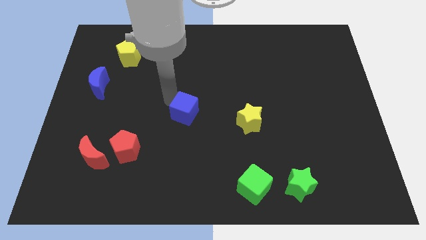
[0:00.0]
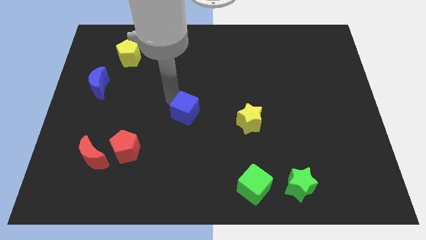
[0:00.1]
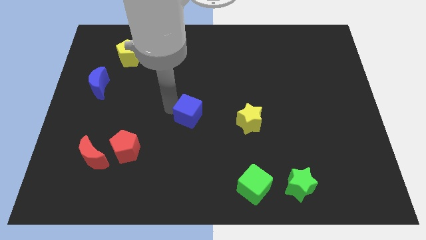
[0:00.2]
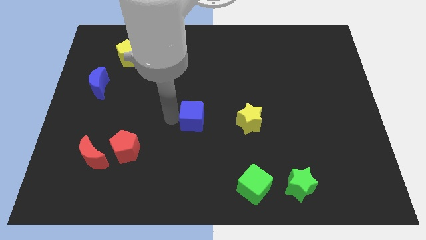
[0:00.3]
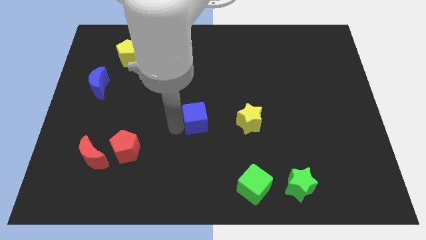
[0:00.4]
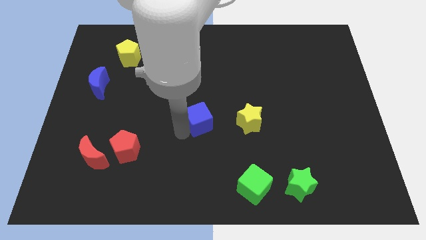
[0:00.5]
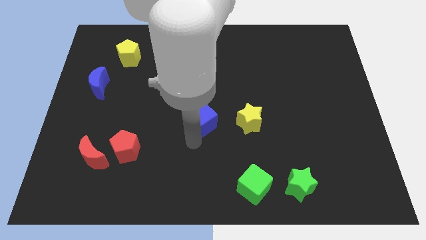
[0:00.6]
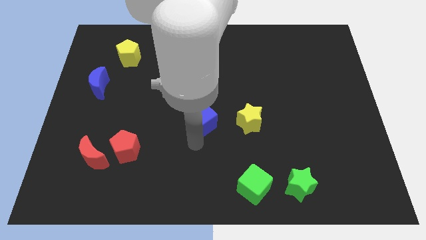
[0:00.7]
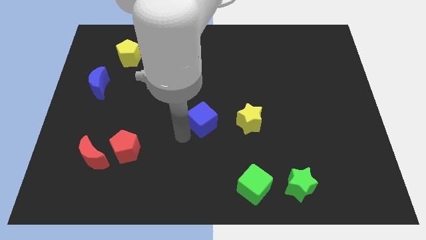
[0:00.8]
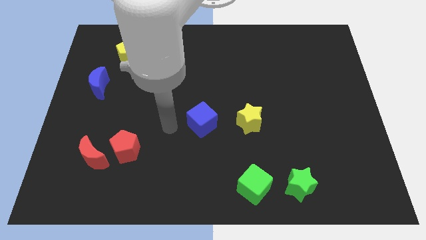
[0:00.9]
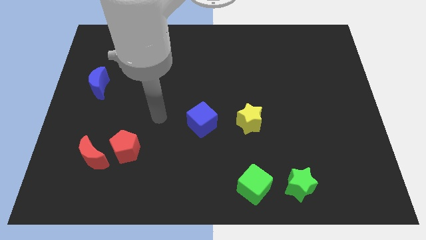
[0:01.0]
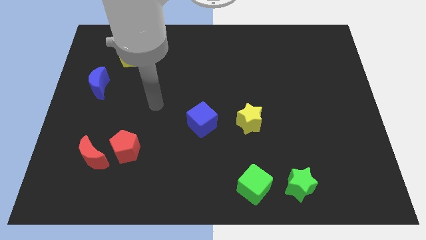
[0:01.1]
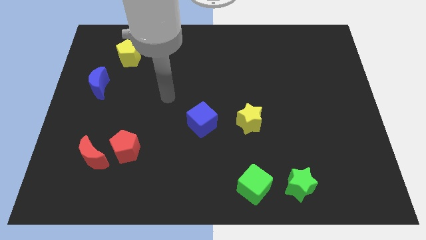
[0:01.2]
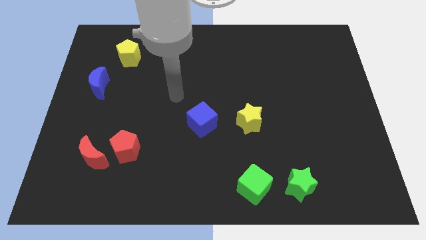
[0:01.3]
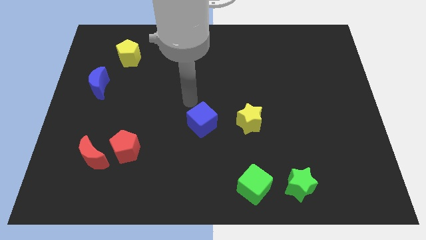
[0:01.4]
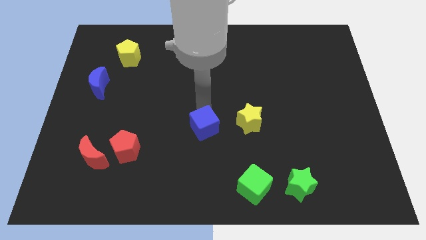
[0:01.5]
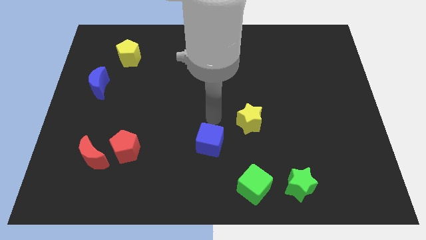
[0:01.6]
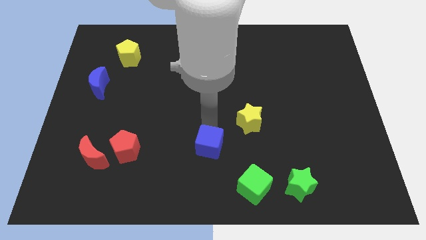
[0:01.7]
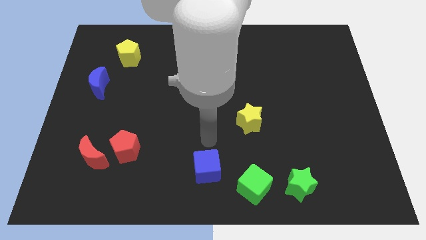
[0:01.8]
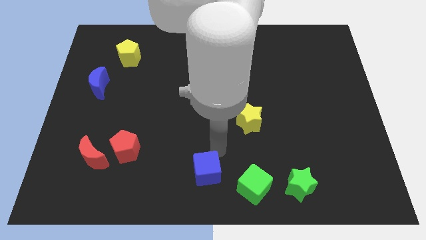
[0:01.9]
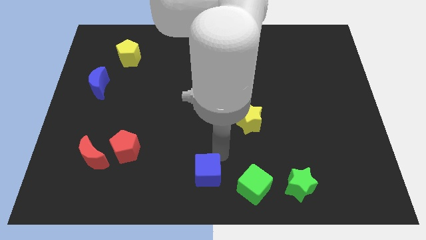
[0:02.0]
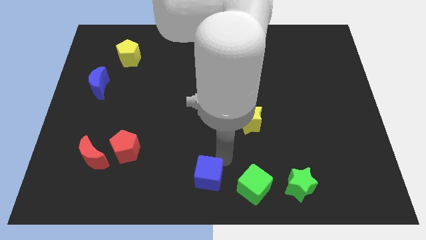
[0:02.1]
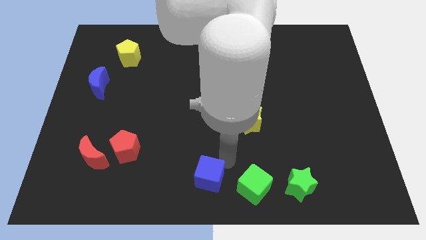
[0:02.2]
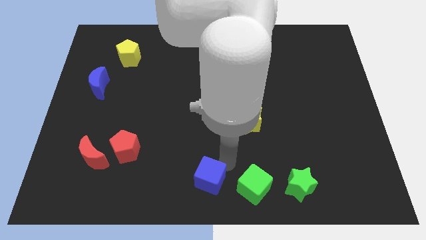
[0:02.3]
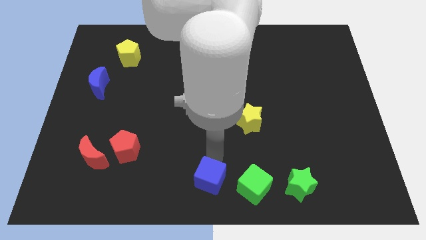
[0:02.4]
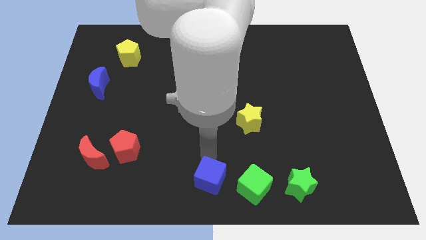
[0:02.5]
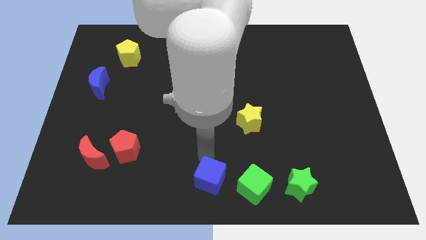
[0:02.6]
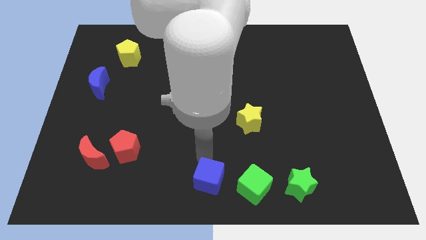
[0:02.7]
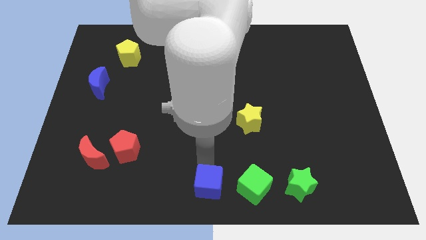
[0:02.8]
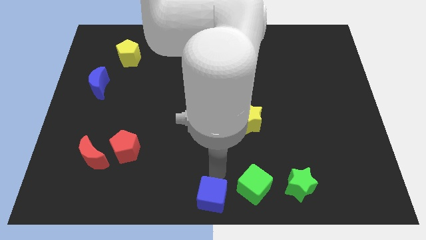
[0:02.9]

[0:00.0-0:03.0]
move the blue cube to the left of the green cube

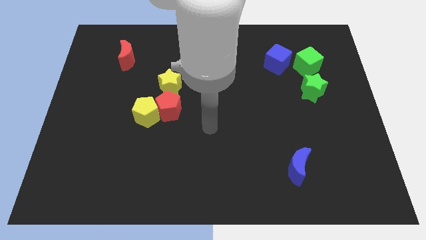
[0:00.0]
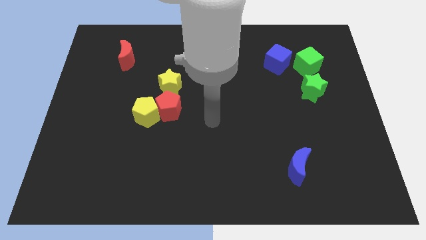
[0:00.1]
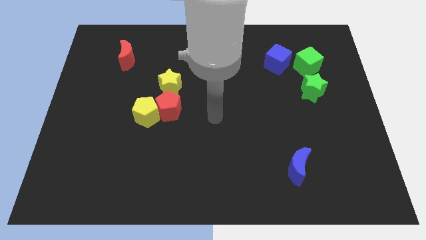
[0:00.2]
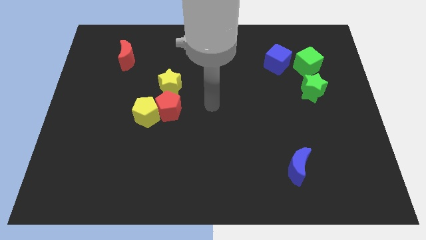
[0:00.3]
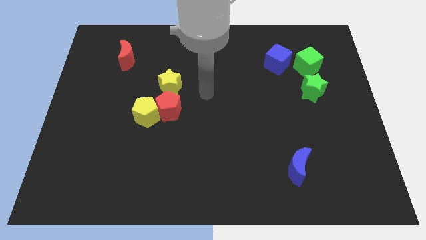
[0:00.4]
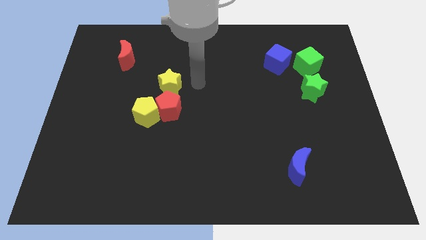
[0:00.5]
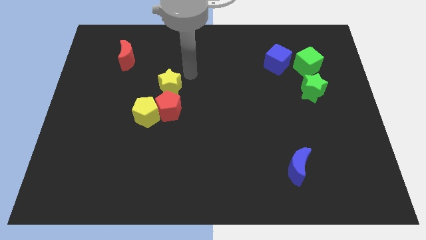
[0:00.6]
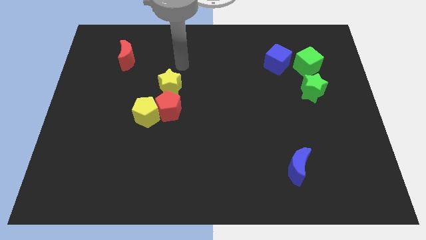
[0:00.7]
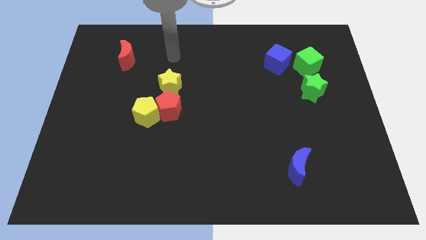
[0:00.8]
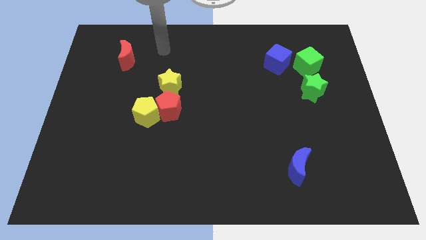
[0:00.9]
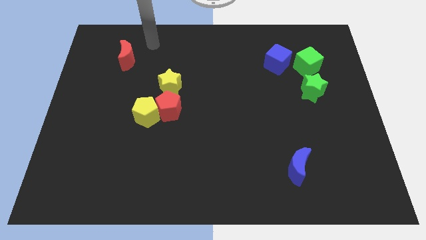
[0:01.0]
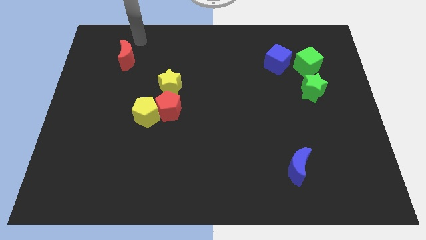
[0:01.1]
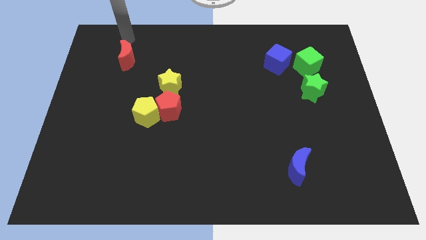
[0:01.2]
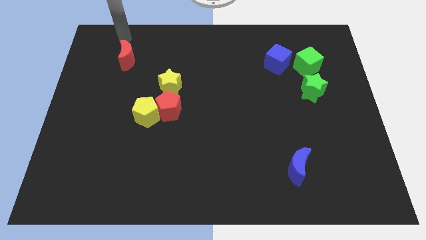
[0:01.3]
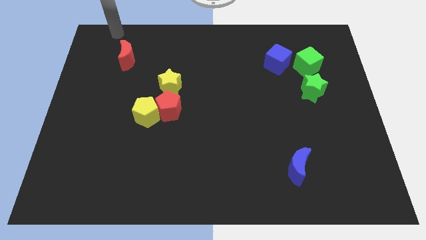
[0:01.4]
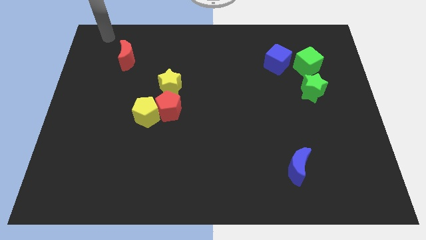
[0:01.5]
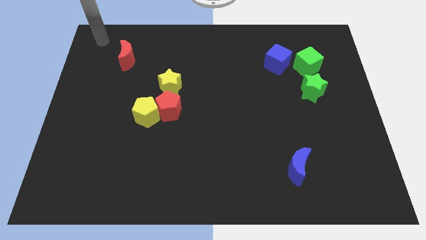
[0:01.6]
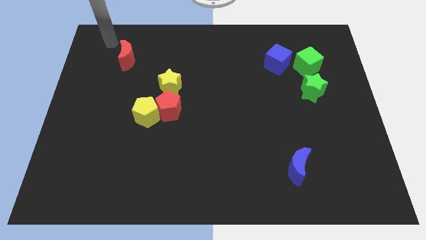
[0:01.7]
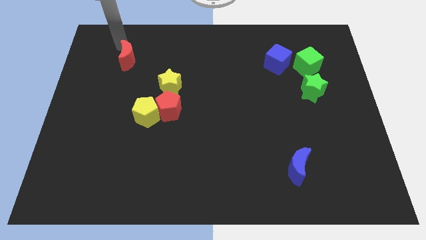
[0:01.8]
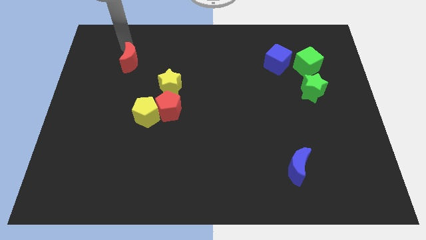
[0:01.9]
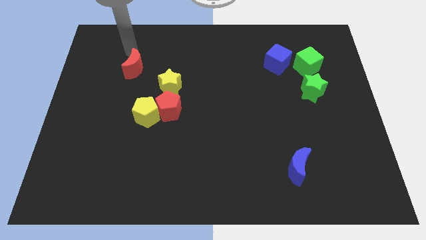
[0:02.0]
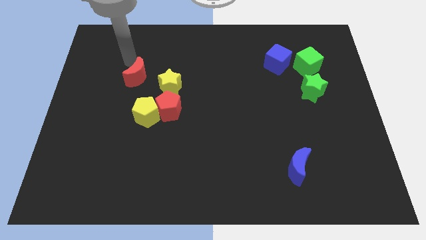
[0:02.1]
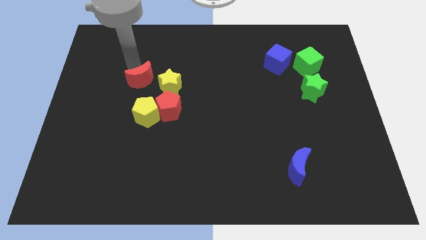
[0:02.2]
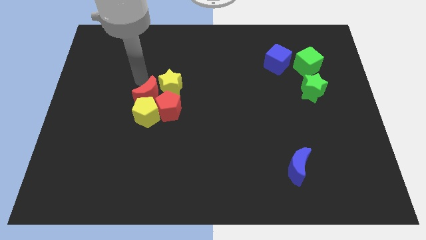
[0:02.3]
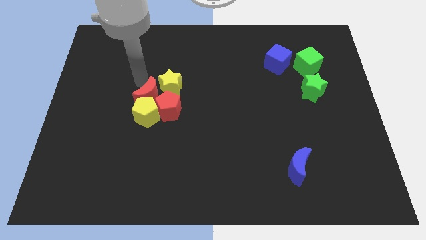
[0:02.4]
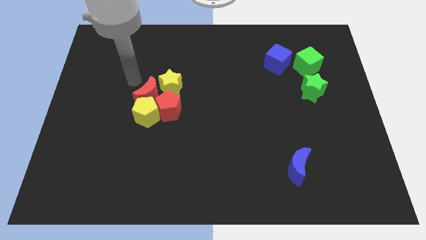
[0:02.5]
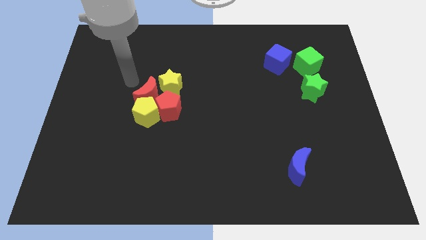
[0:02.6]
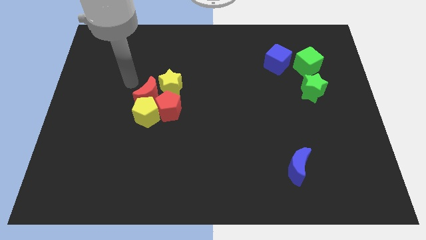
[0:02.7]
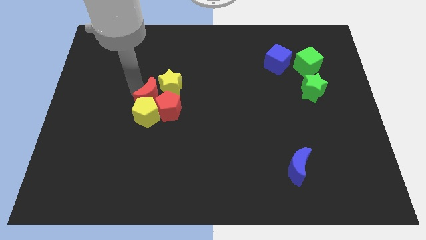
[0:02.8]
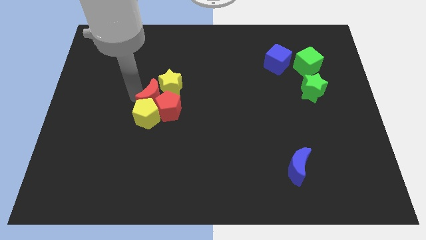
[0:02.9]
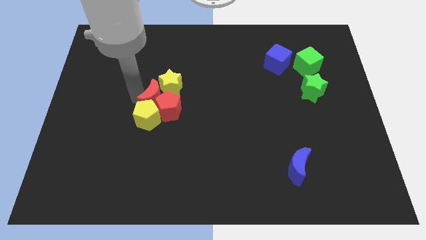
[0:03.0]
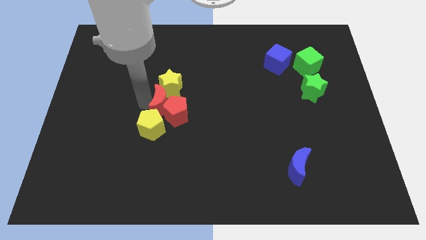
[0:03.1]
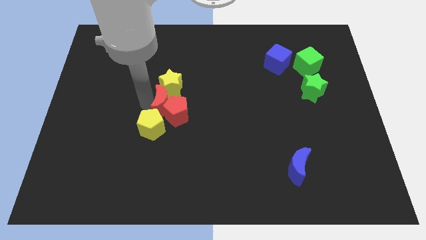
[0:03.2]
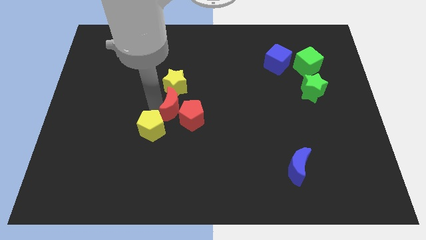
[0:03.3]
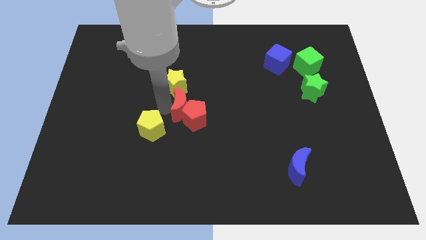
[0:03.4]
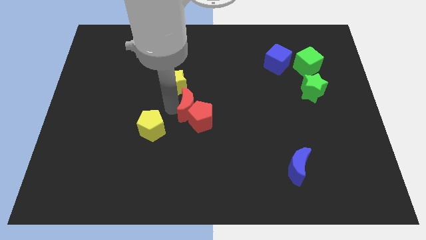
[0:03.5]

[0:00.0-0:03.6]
push the red moon into red pentagon

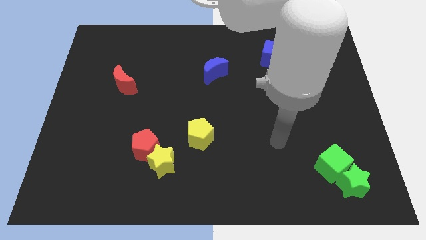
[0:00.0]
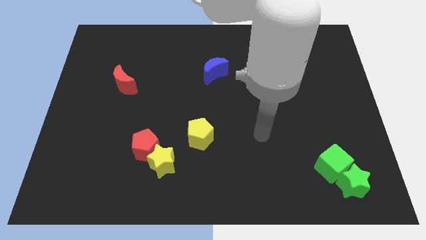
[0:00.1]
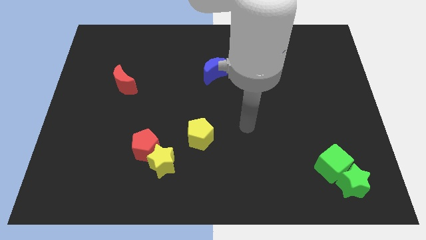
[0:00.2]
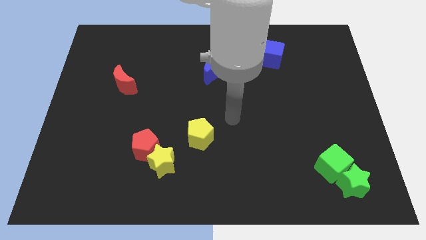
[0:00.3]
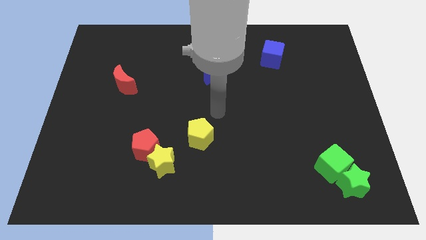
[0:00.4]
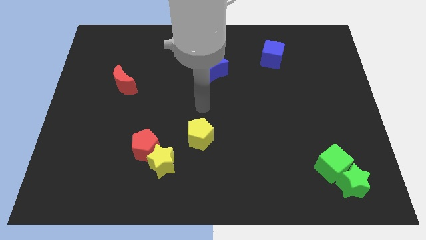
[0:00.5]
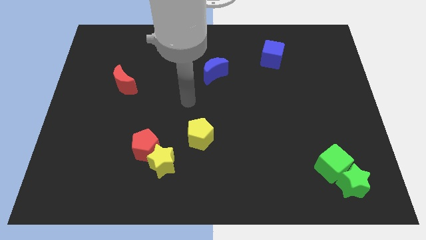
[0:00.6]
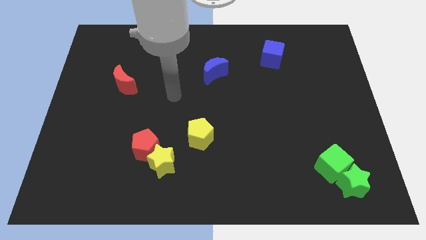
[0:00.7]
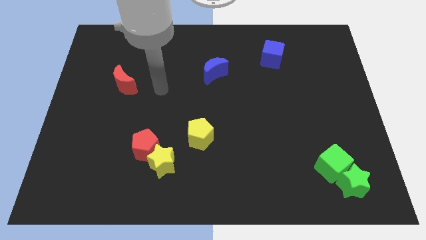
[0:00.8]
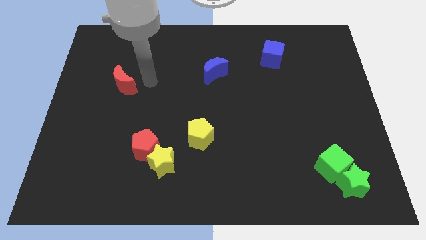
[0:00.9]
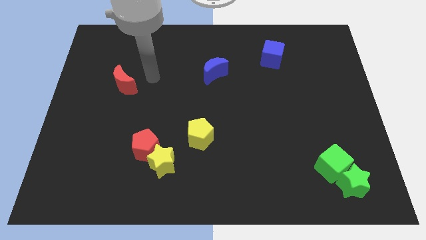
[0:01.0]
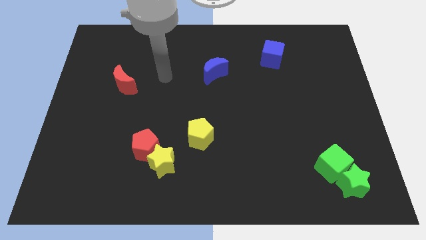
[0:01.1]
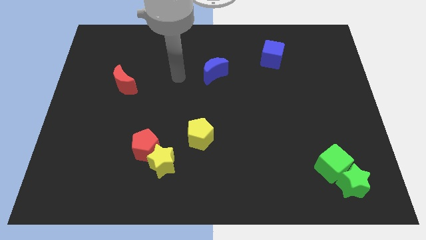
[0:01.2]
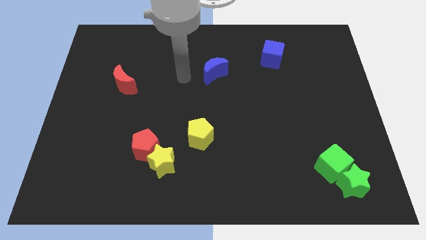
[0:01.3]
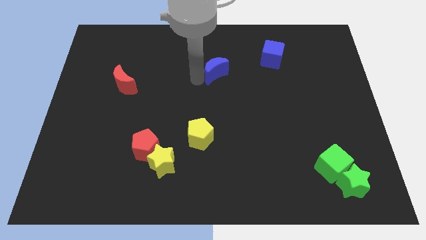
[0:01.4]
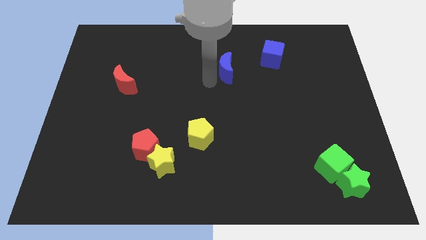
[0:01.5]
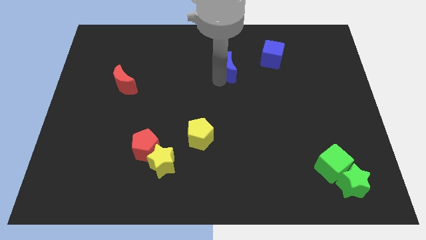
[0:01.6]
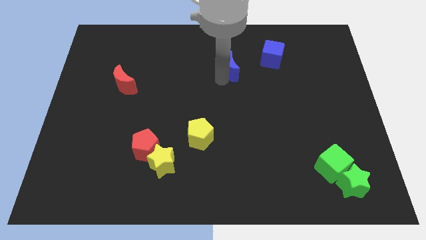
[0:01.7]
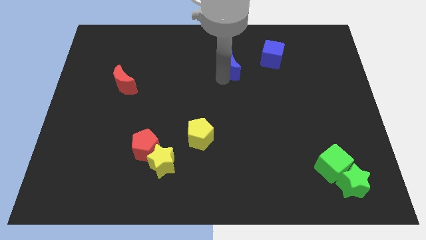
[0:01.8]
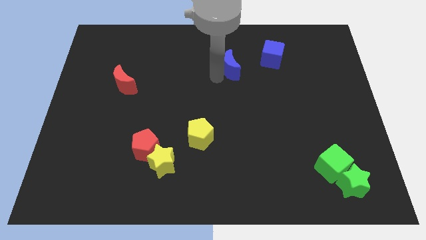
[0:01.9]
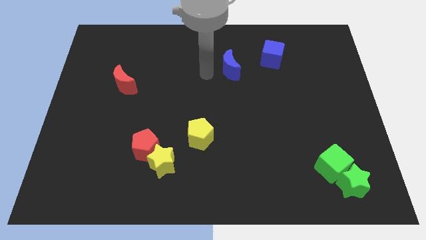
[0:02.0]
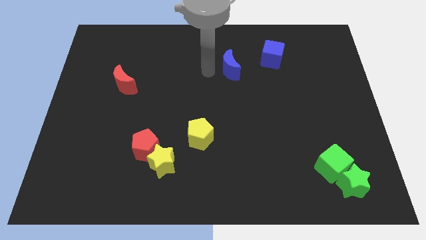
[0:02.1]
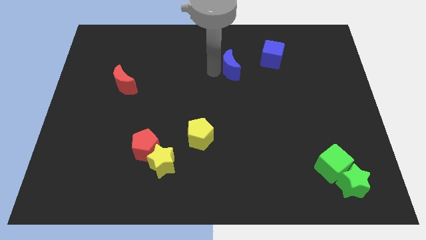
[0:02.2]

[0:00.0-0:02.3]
move the blue crescent towards the blue cube
